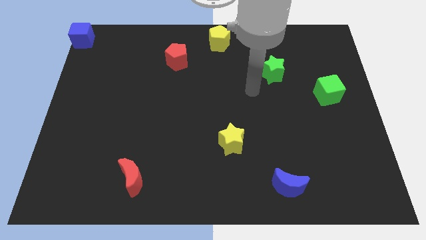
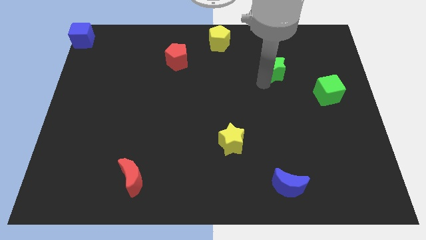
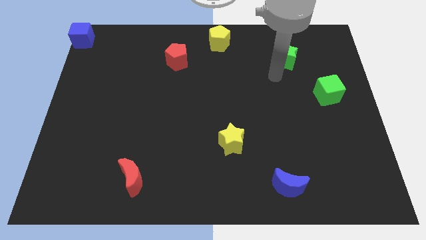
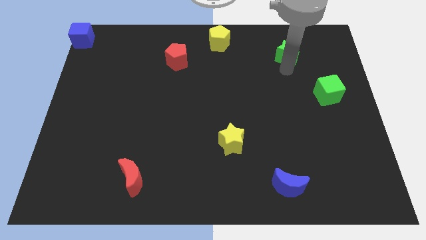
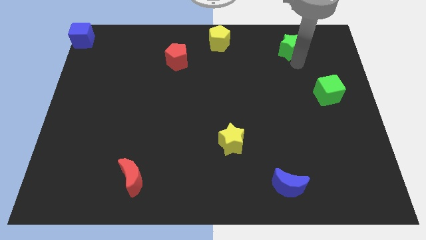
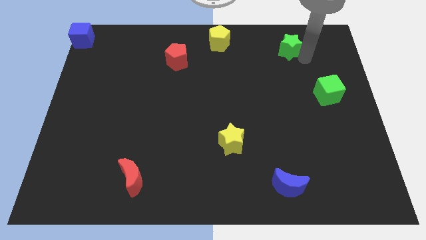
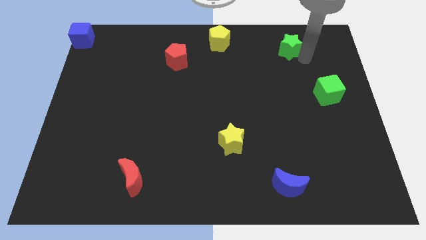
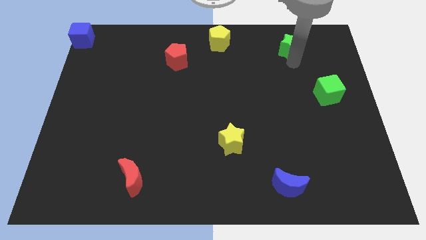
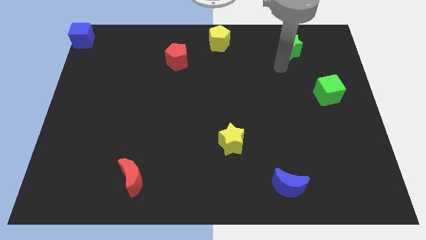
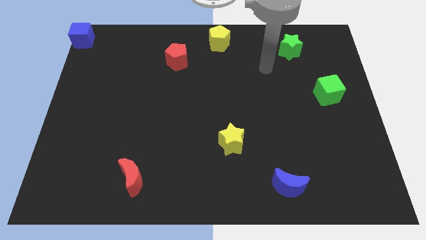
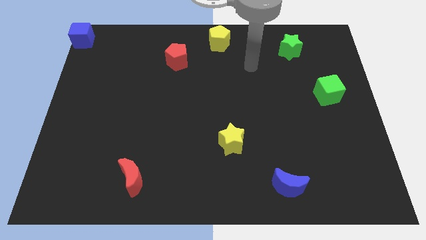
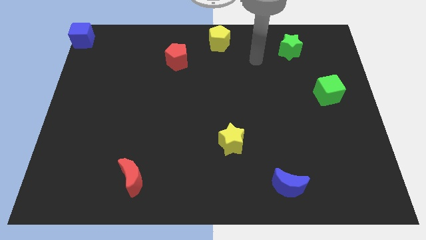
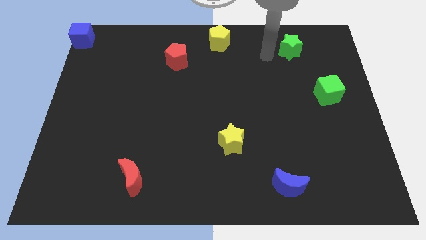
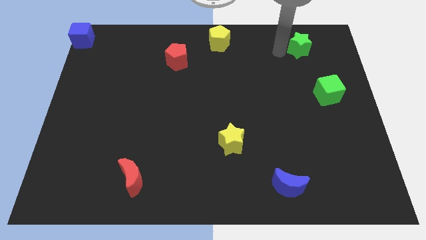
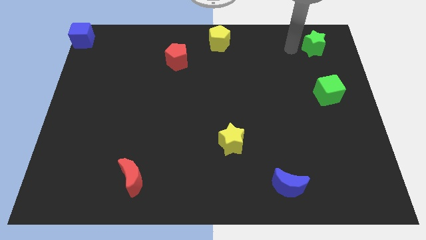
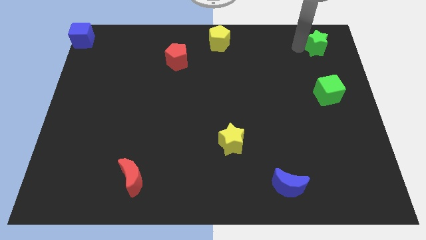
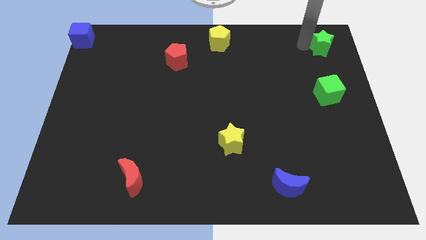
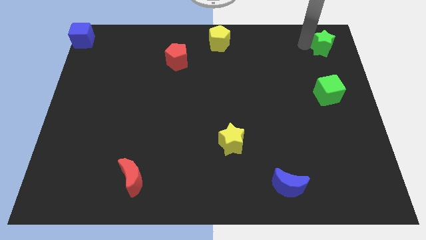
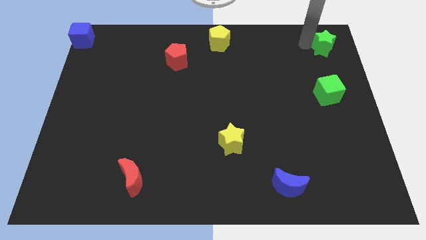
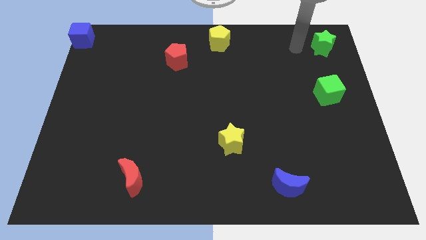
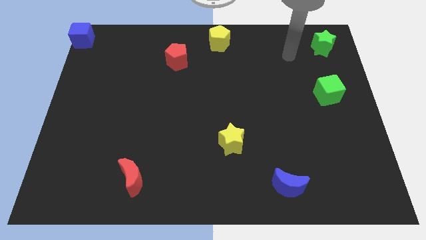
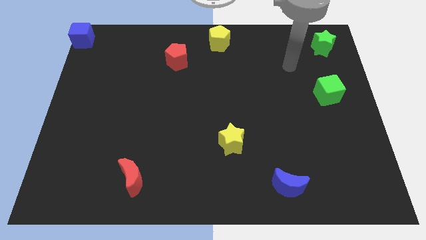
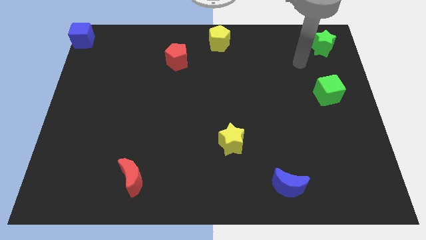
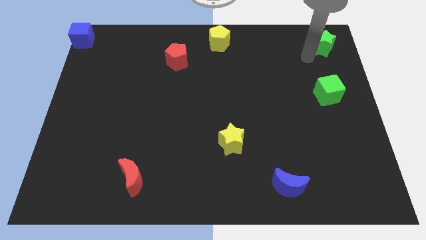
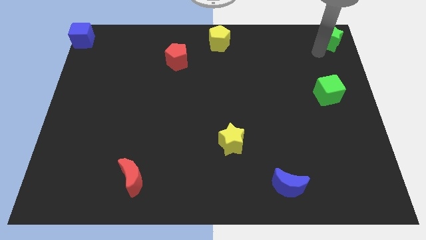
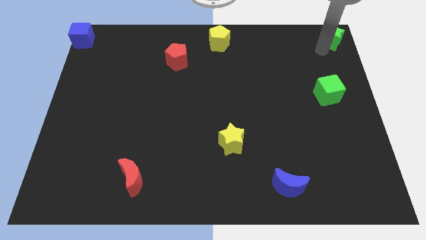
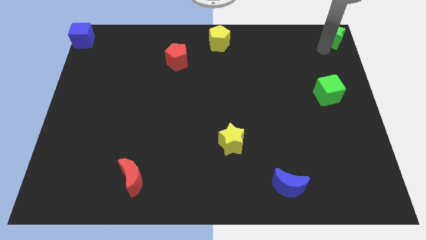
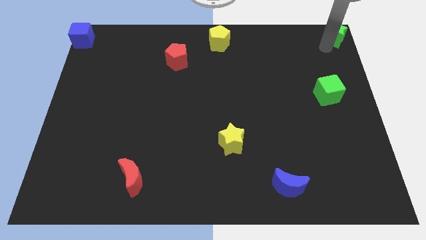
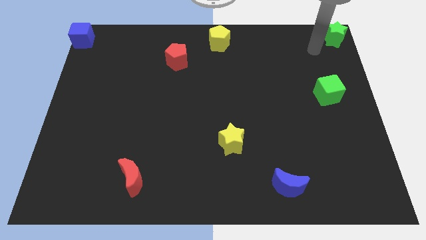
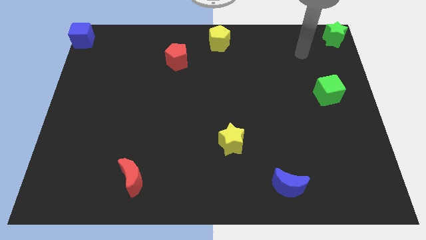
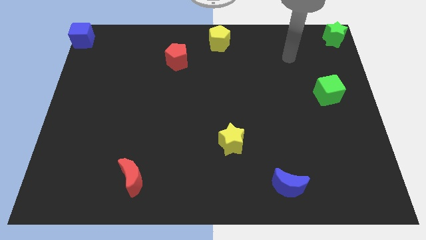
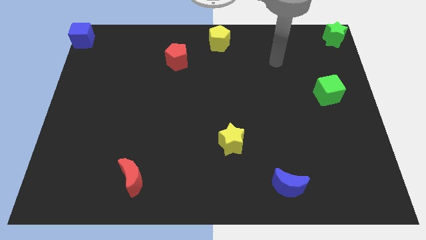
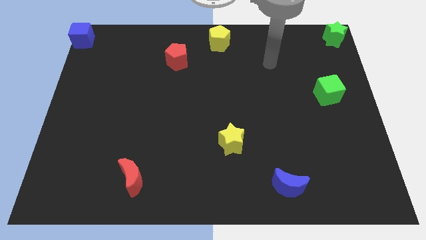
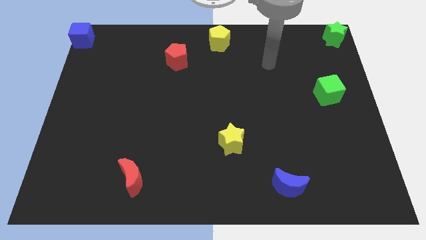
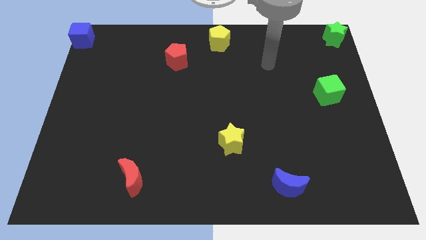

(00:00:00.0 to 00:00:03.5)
put the green star at the top right corner of the board

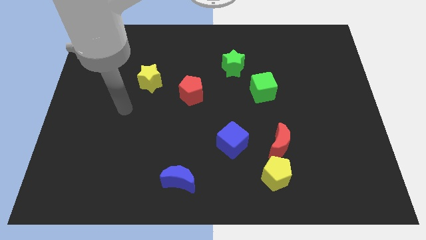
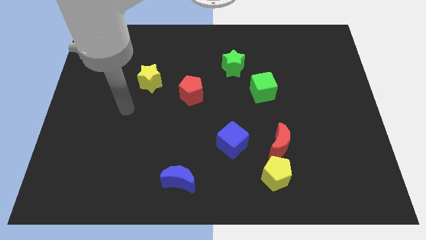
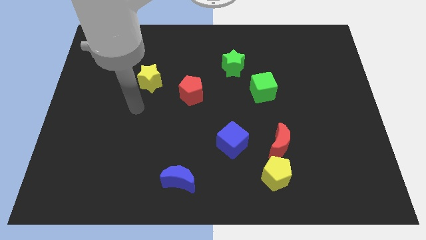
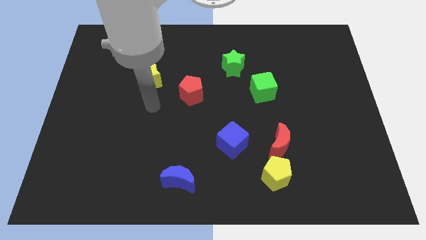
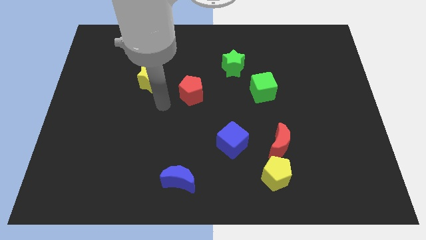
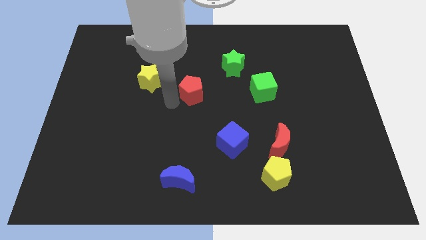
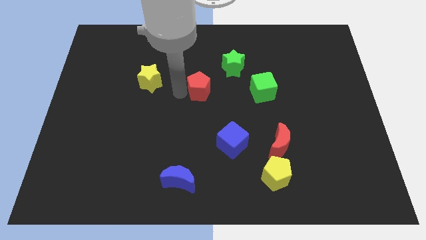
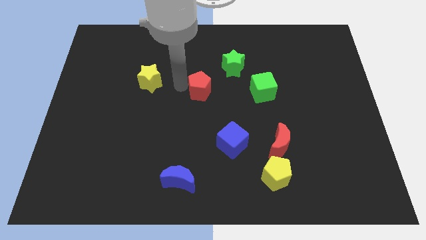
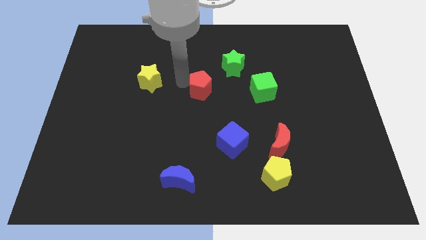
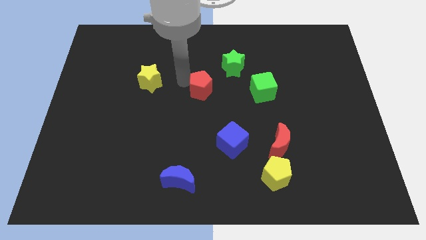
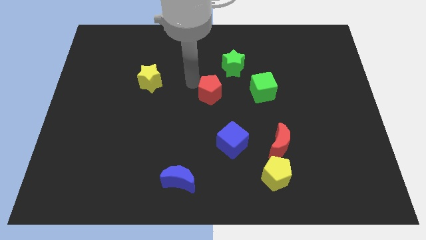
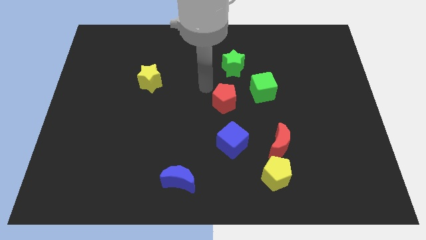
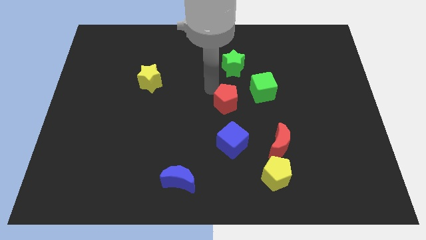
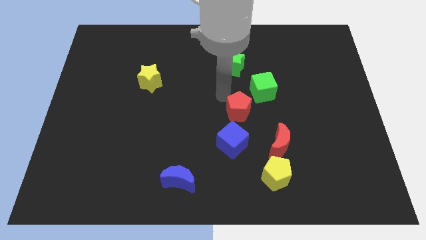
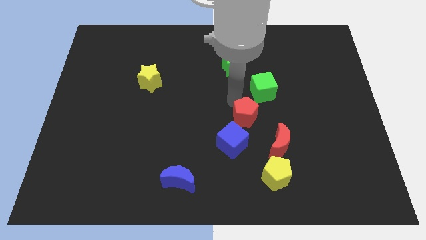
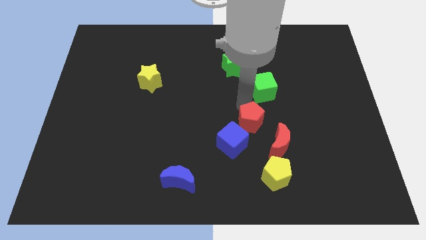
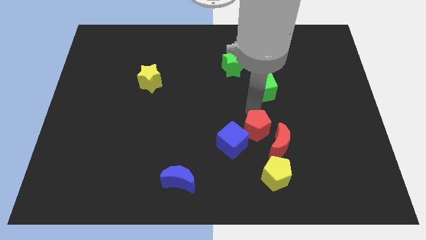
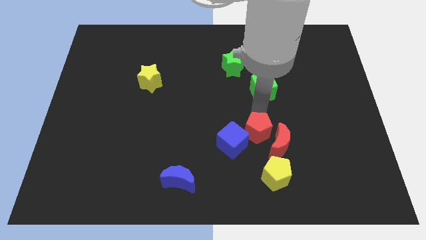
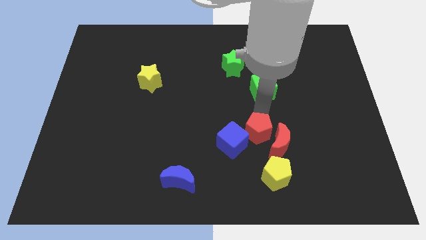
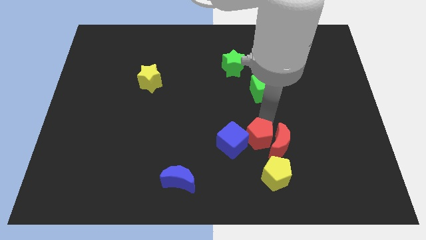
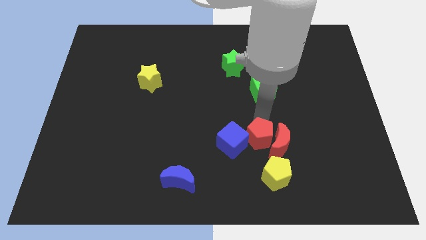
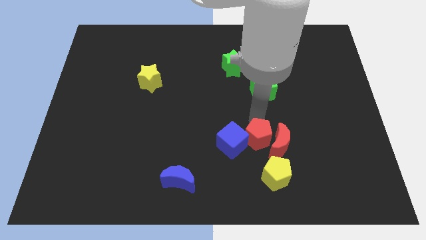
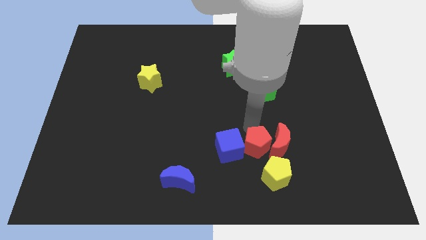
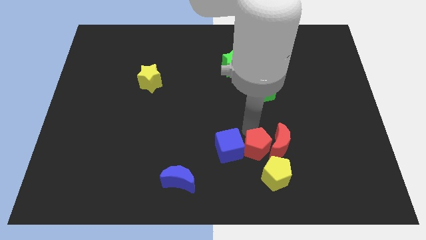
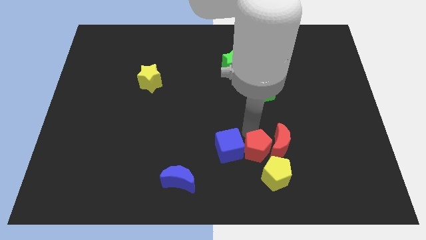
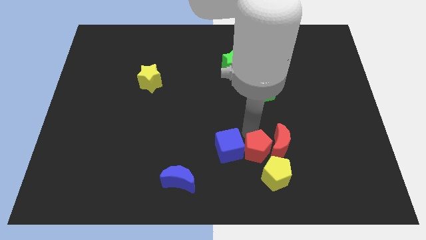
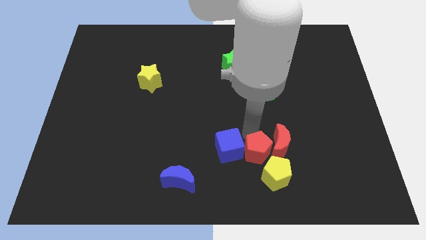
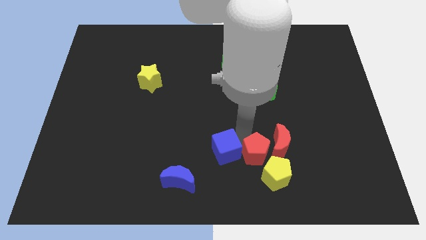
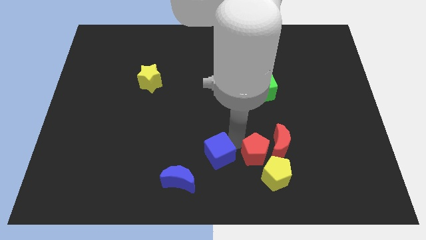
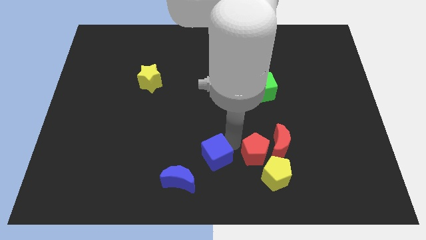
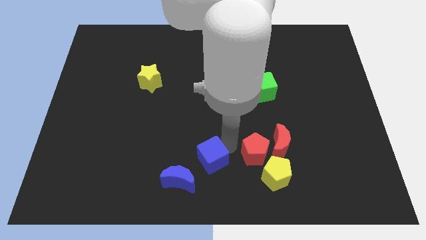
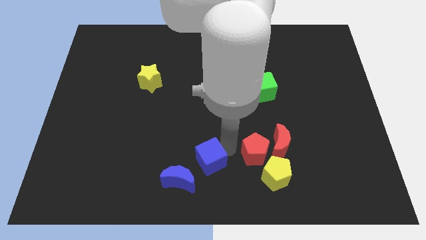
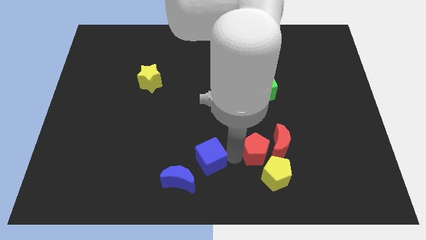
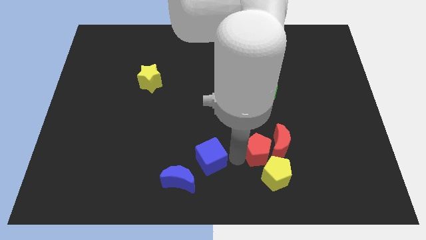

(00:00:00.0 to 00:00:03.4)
slide red pentagon between blue cube and red pentagon

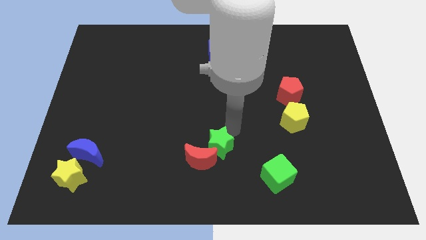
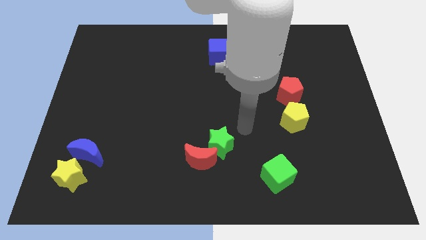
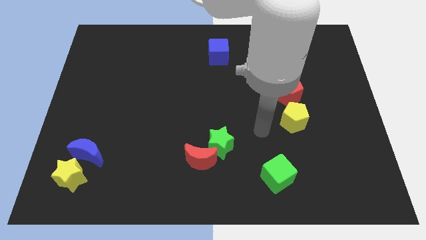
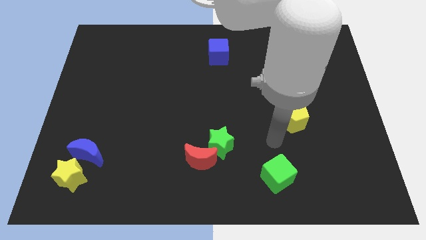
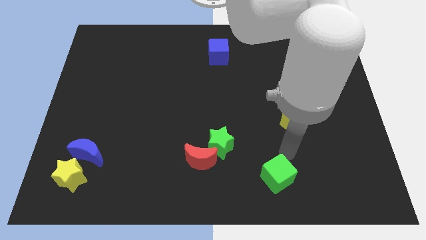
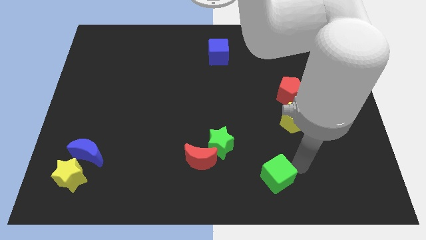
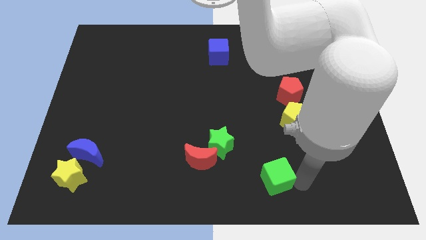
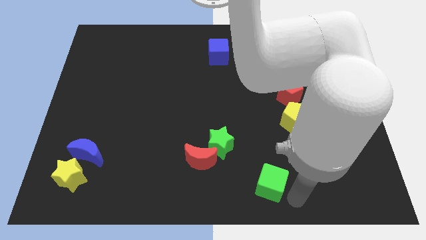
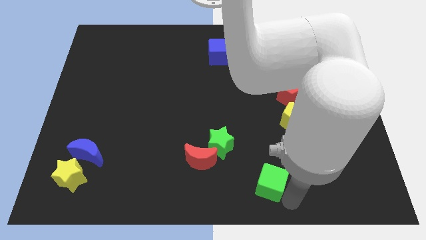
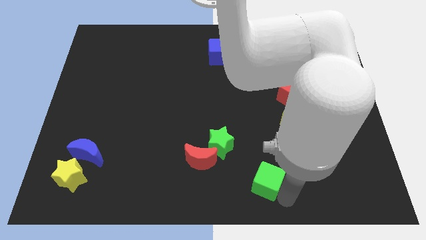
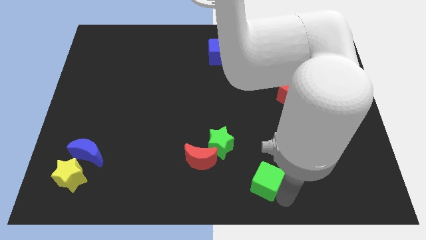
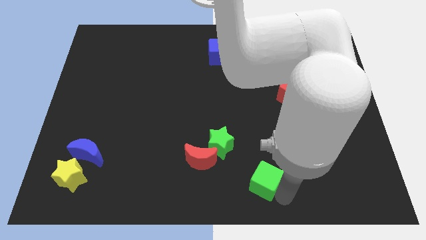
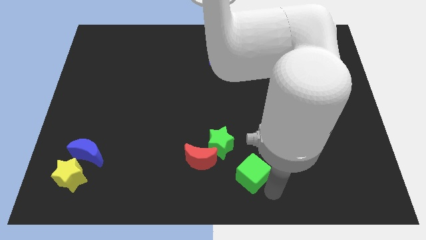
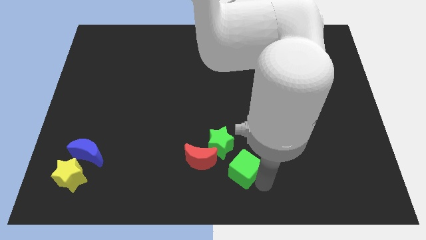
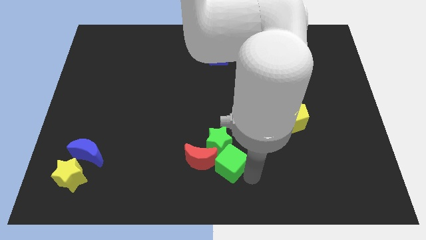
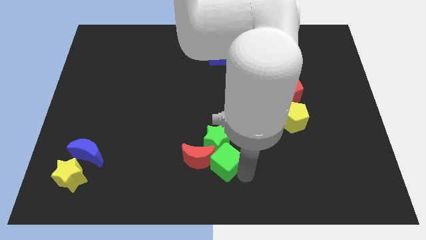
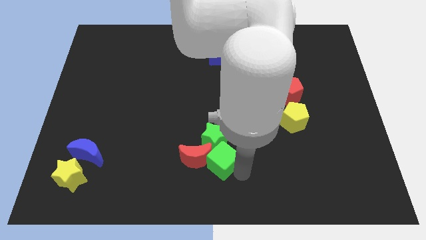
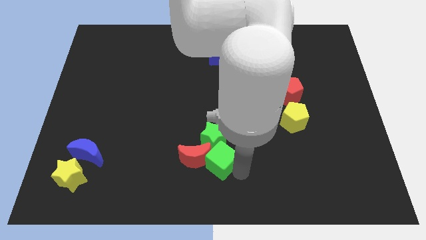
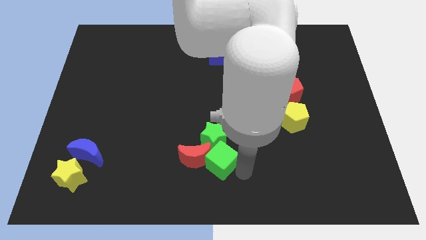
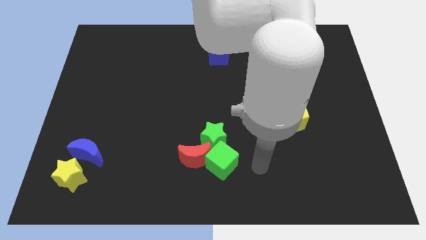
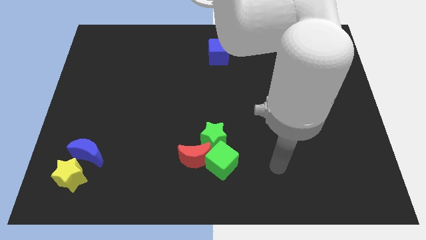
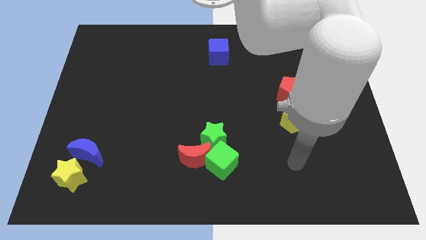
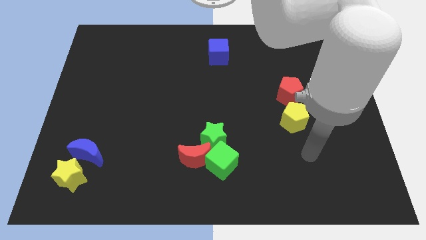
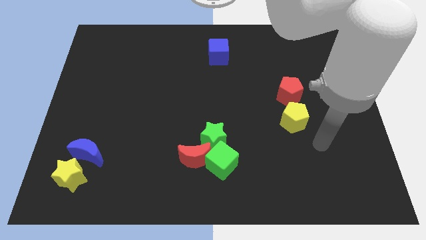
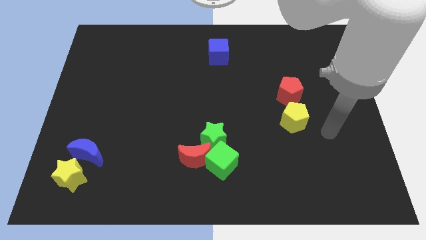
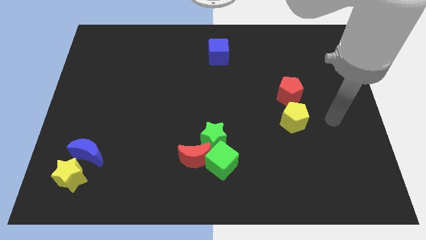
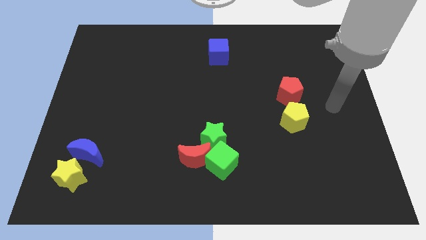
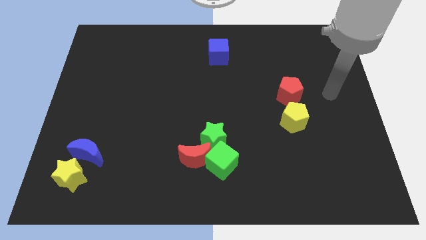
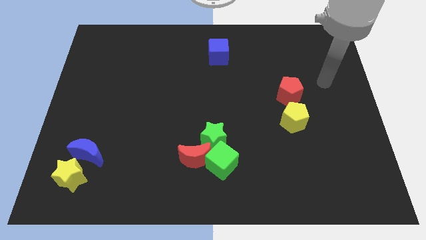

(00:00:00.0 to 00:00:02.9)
move green cube right beside the red moon
